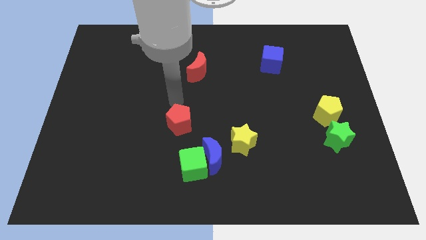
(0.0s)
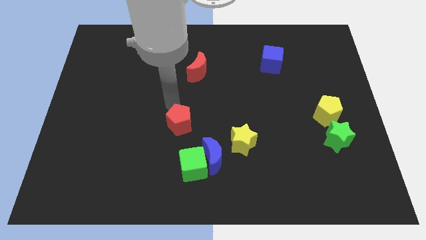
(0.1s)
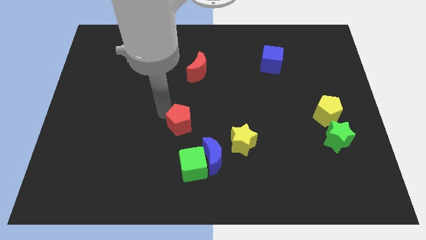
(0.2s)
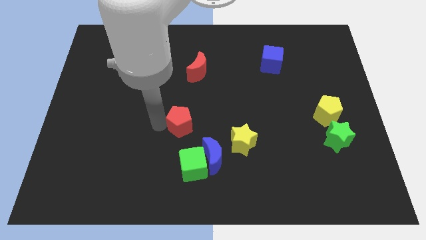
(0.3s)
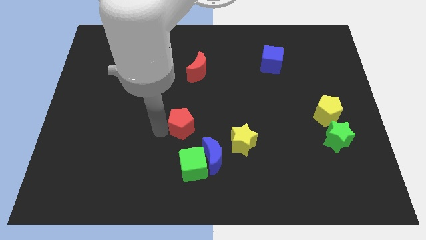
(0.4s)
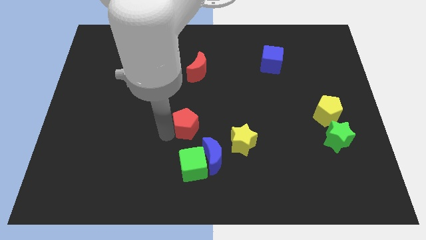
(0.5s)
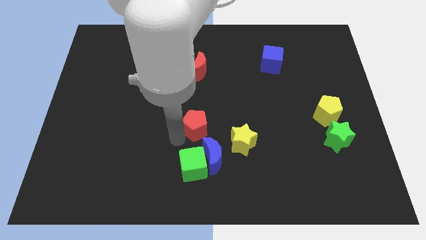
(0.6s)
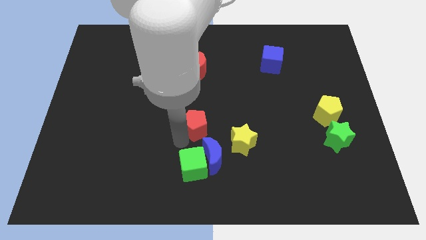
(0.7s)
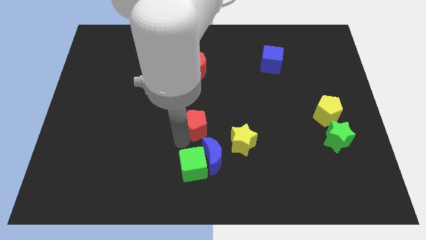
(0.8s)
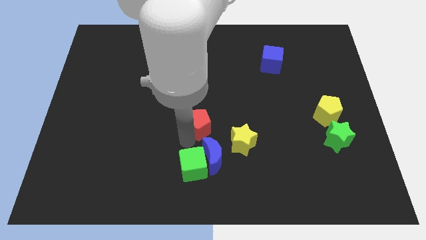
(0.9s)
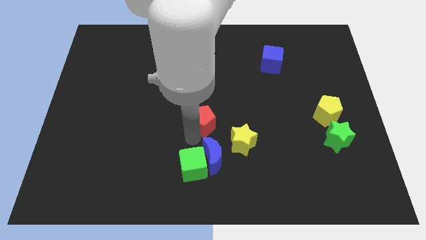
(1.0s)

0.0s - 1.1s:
place the red pentagon above the blue moon

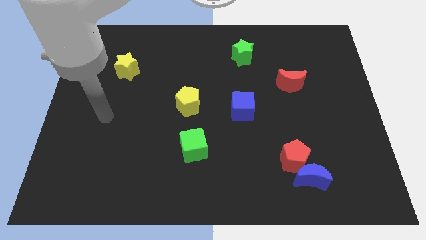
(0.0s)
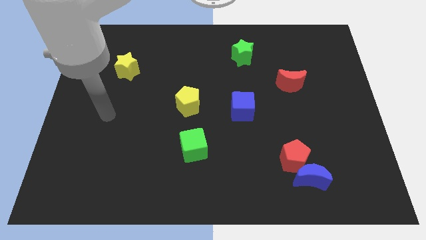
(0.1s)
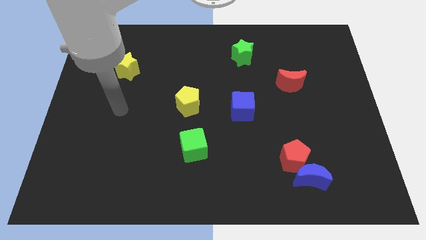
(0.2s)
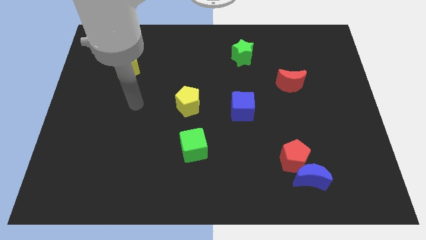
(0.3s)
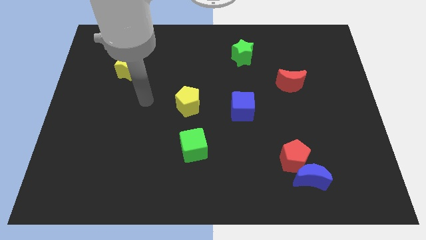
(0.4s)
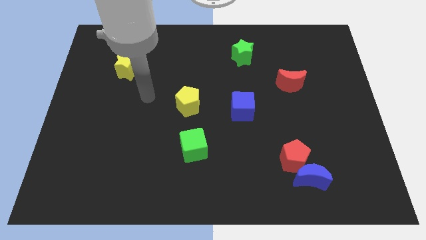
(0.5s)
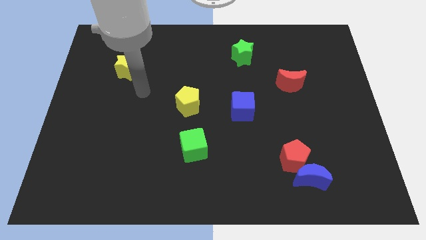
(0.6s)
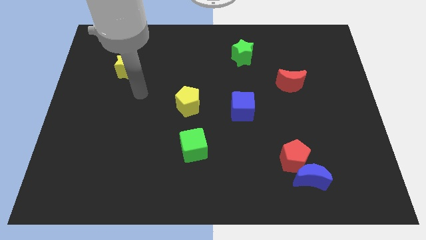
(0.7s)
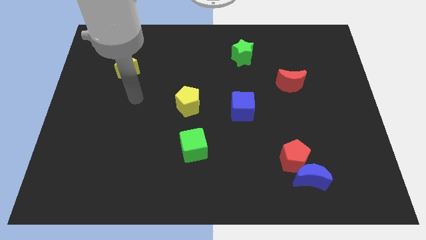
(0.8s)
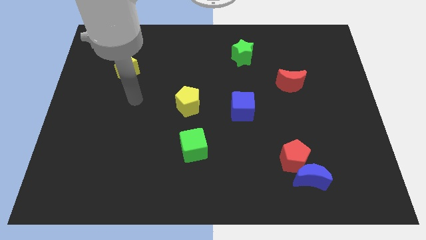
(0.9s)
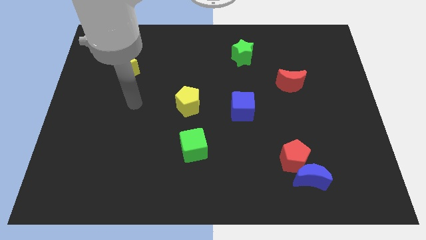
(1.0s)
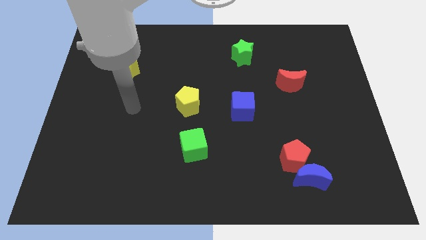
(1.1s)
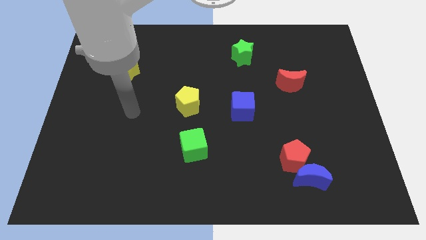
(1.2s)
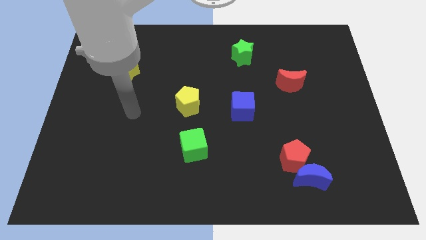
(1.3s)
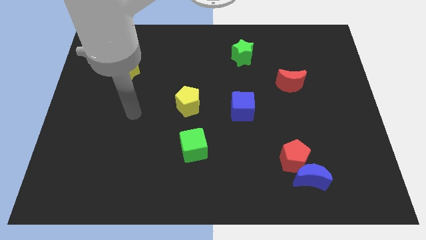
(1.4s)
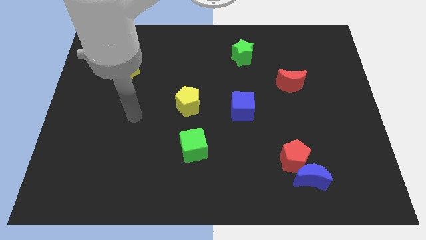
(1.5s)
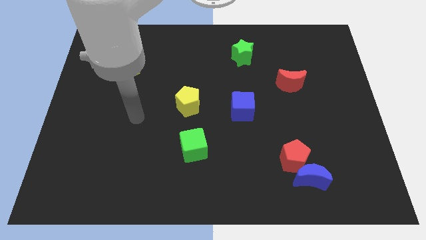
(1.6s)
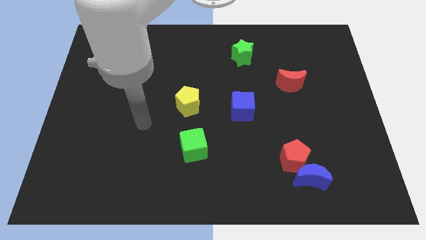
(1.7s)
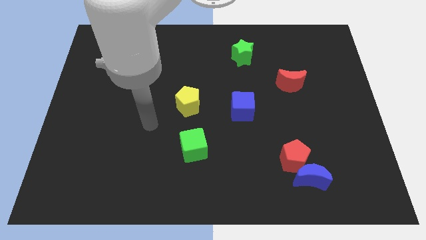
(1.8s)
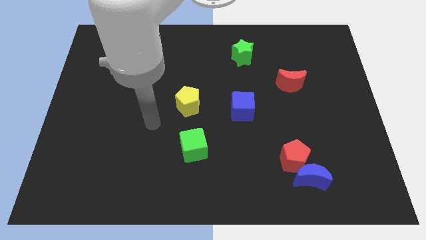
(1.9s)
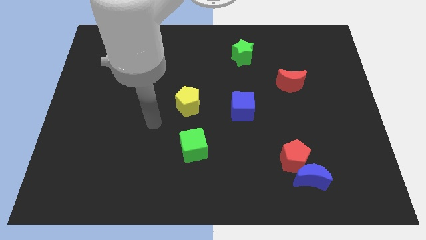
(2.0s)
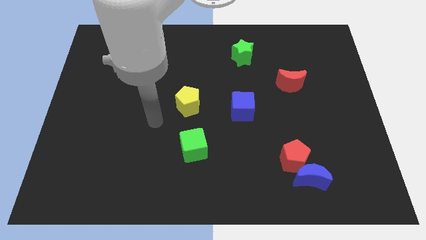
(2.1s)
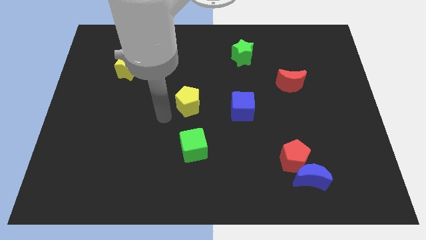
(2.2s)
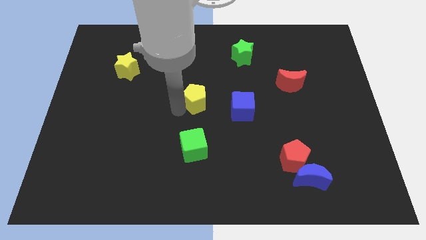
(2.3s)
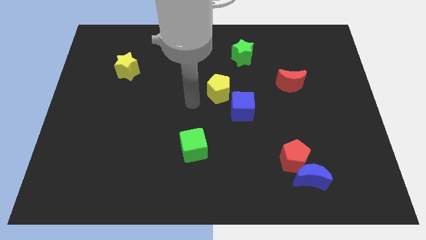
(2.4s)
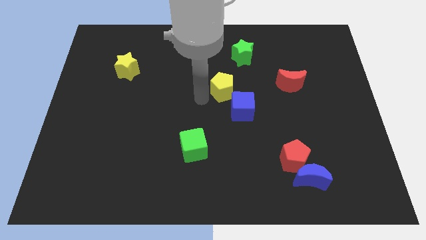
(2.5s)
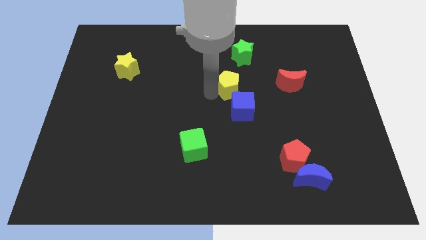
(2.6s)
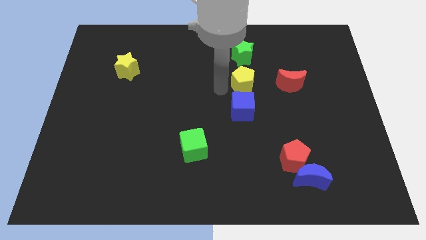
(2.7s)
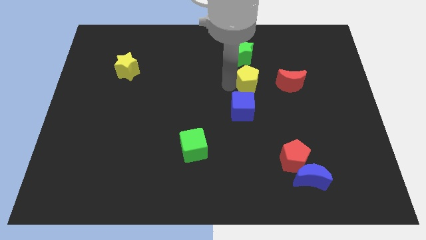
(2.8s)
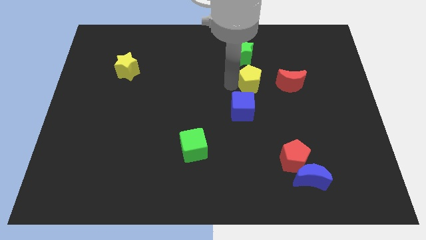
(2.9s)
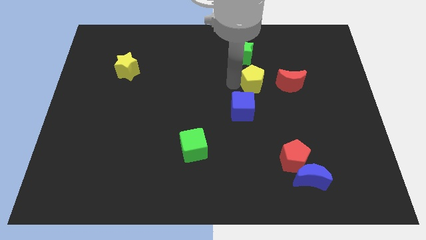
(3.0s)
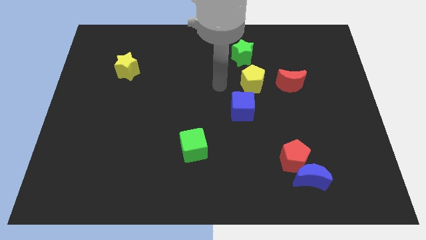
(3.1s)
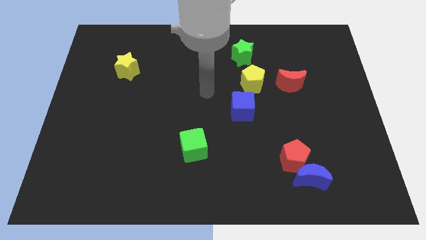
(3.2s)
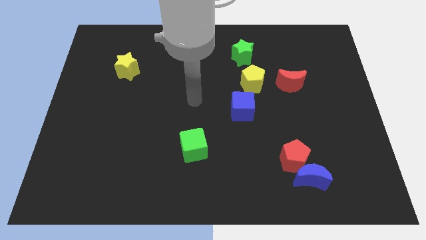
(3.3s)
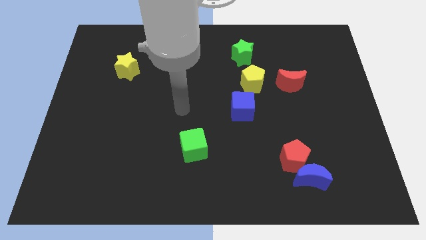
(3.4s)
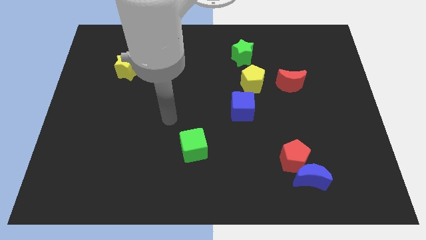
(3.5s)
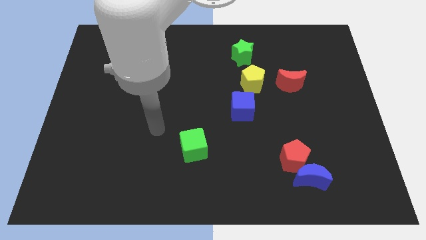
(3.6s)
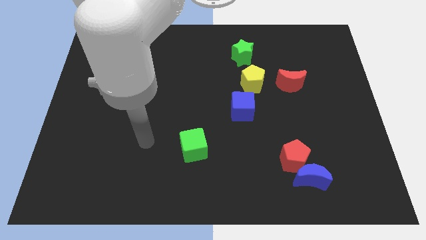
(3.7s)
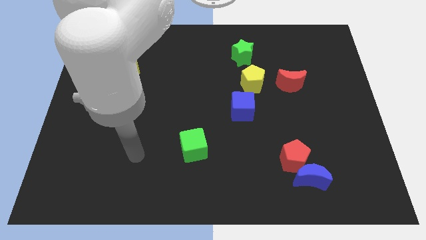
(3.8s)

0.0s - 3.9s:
move the yellow pentagon in between the green star and the blue cube

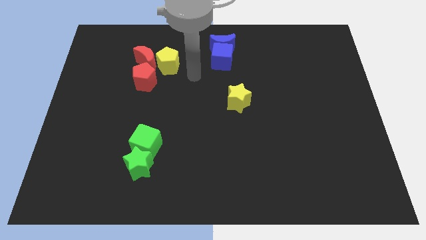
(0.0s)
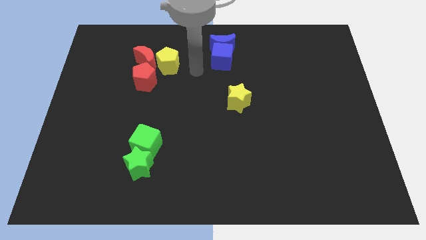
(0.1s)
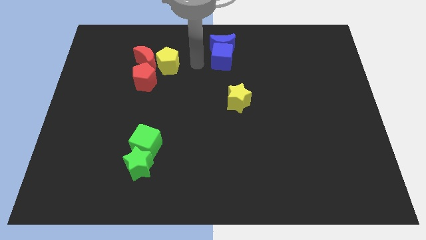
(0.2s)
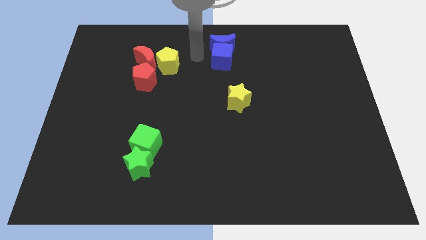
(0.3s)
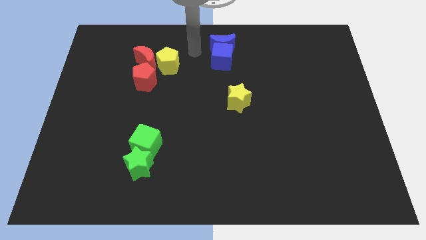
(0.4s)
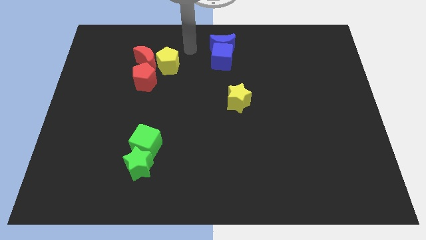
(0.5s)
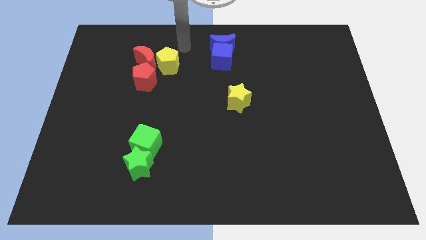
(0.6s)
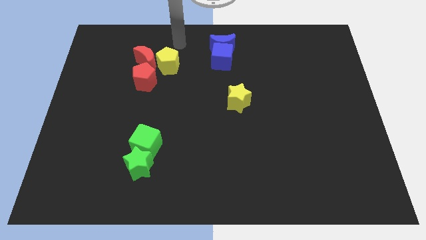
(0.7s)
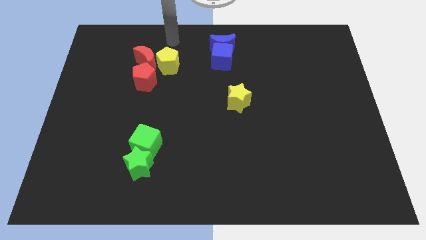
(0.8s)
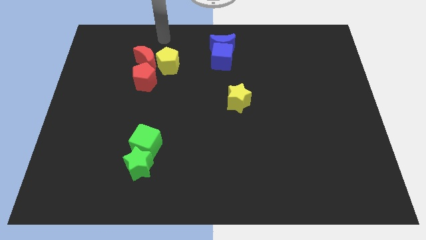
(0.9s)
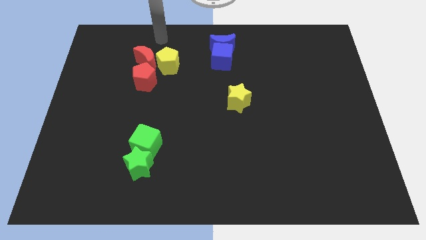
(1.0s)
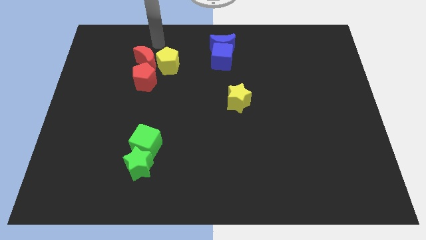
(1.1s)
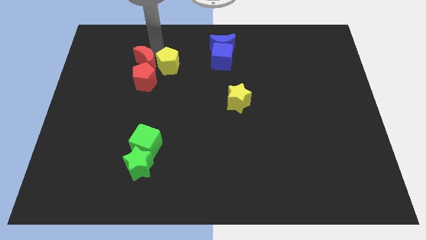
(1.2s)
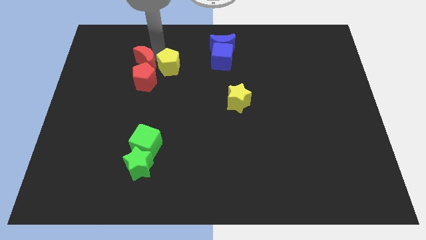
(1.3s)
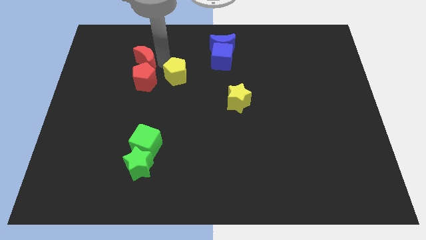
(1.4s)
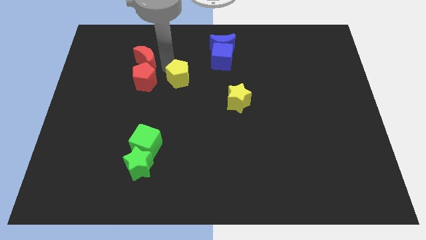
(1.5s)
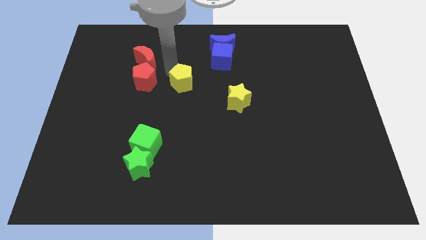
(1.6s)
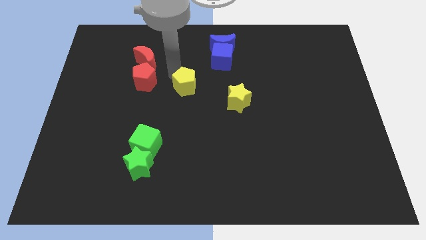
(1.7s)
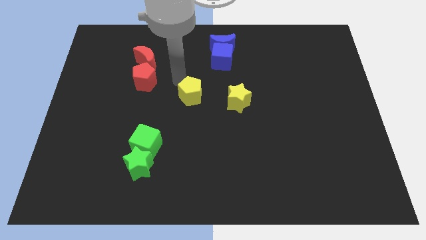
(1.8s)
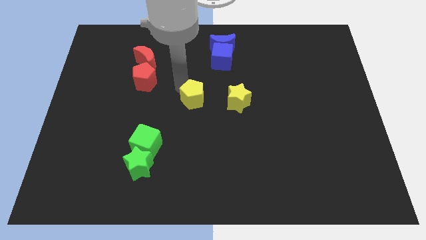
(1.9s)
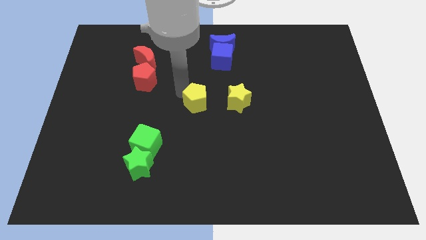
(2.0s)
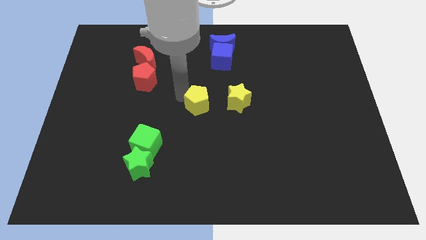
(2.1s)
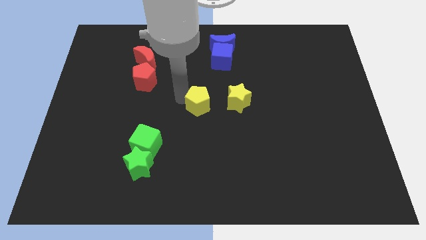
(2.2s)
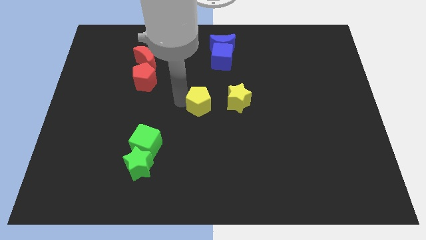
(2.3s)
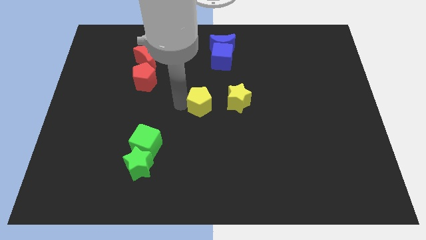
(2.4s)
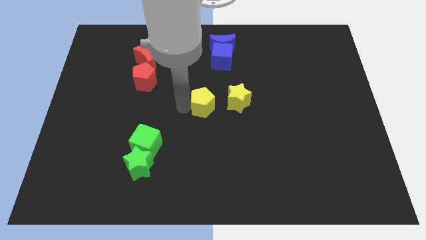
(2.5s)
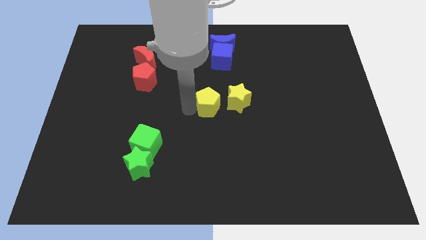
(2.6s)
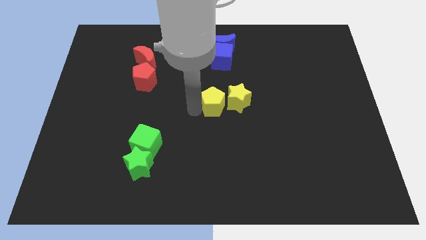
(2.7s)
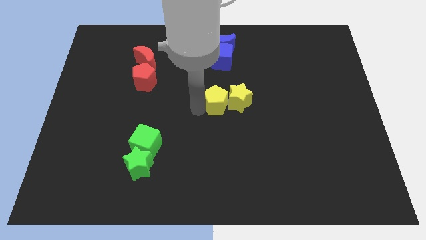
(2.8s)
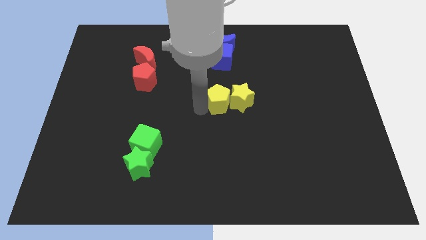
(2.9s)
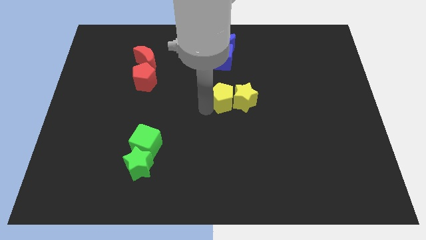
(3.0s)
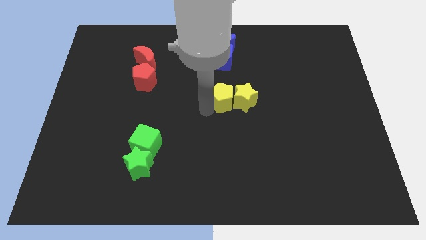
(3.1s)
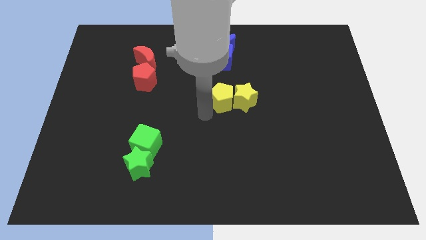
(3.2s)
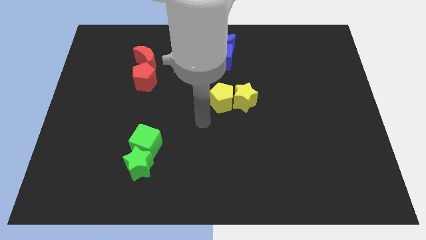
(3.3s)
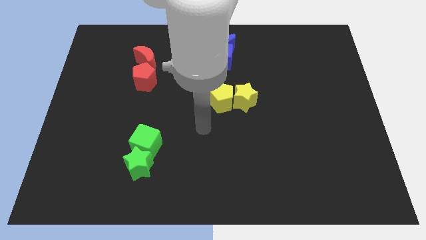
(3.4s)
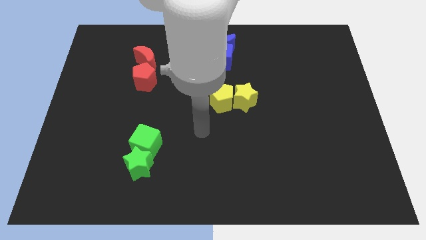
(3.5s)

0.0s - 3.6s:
place the yellow pentagon to the left of the yellow star

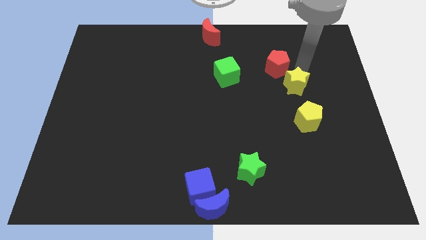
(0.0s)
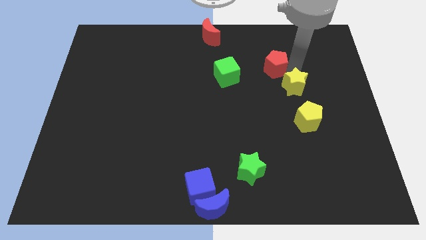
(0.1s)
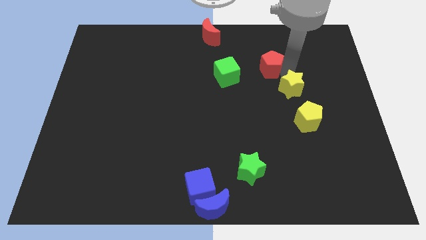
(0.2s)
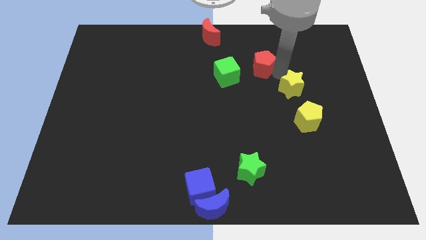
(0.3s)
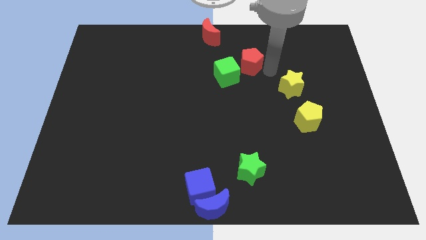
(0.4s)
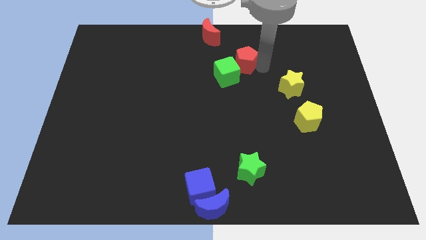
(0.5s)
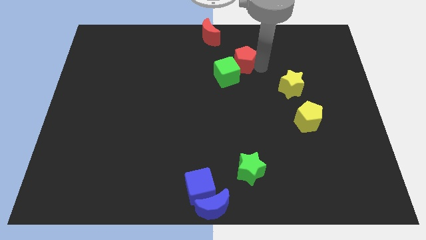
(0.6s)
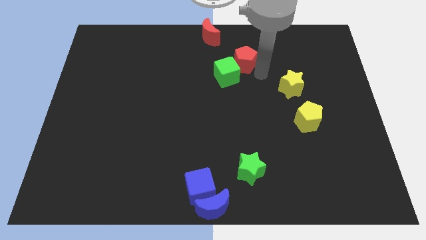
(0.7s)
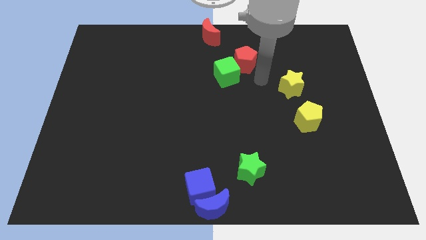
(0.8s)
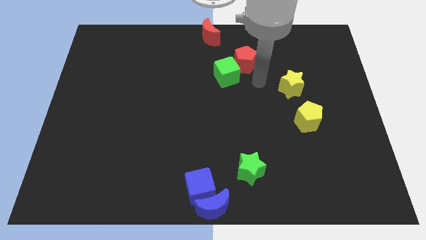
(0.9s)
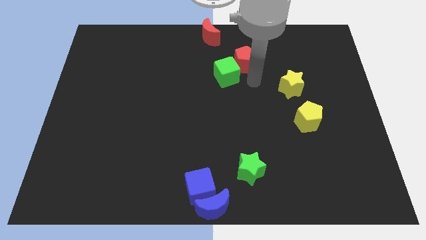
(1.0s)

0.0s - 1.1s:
move the red pentagon close to the green cube
